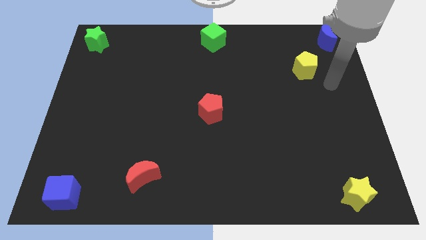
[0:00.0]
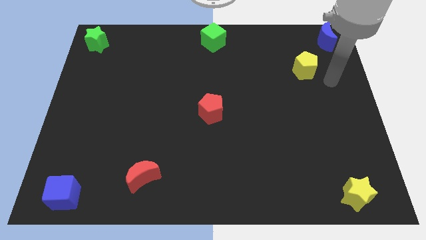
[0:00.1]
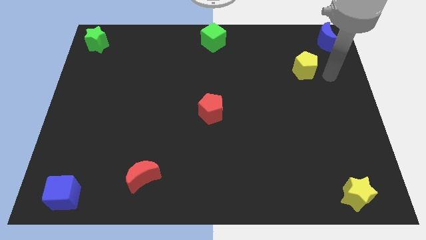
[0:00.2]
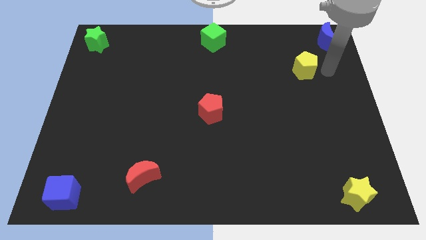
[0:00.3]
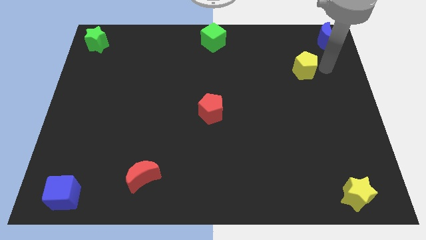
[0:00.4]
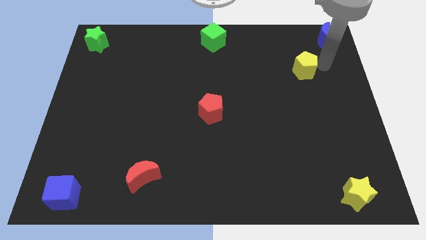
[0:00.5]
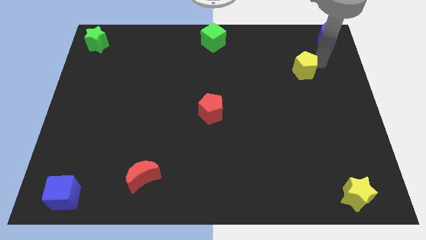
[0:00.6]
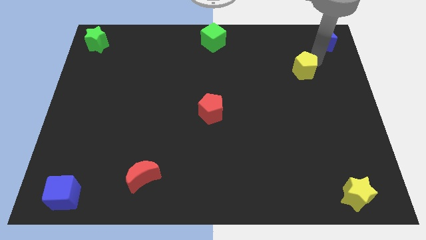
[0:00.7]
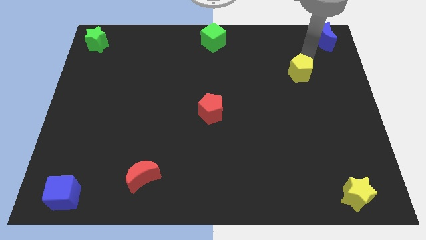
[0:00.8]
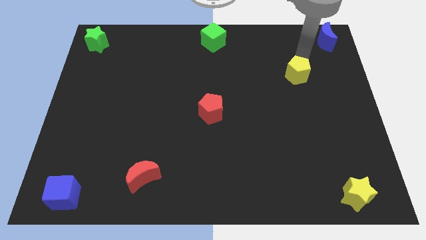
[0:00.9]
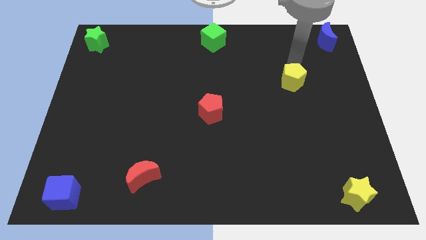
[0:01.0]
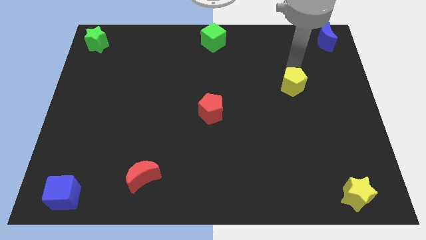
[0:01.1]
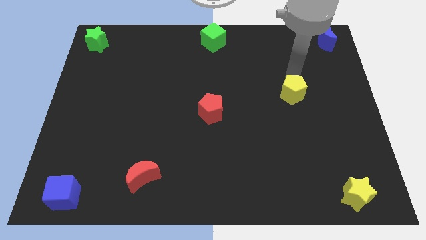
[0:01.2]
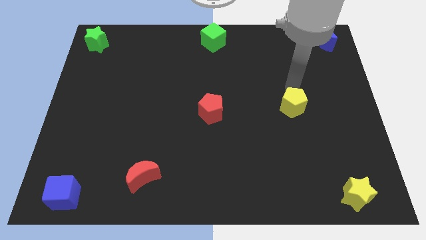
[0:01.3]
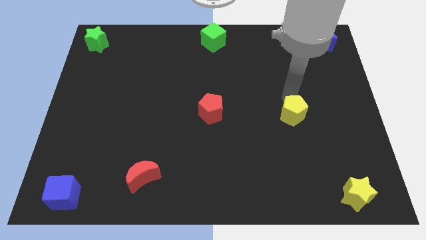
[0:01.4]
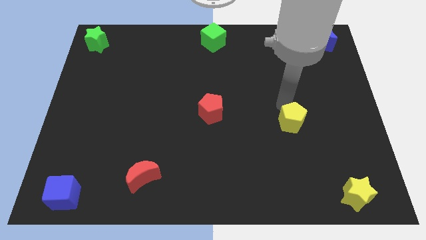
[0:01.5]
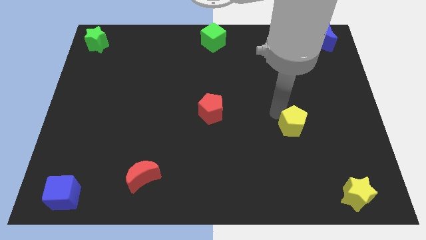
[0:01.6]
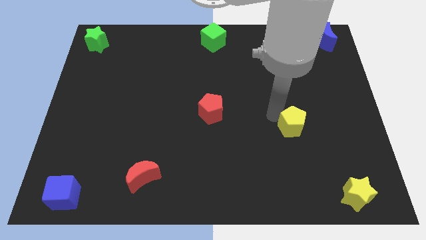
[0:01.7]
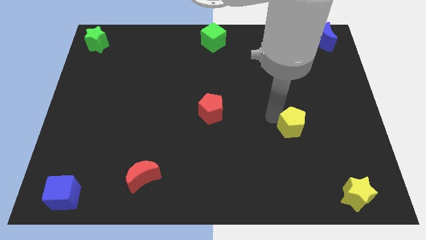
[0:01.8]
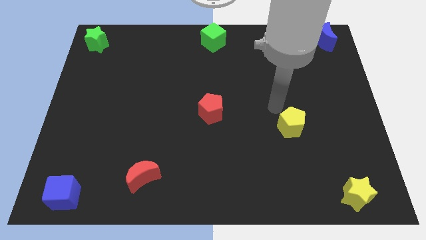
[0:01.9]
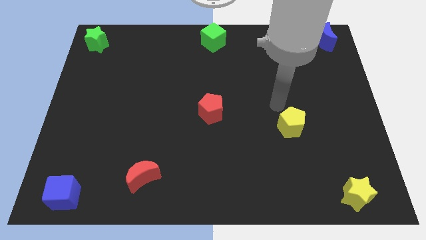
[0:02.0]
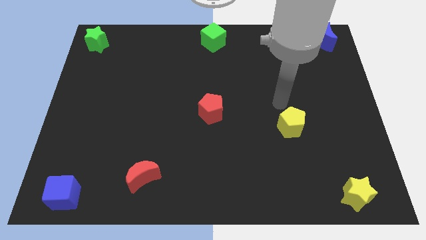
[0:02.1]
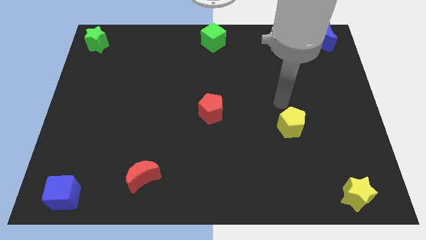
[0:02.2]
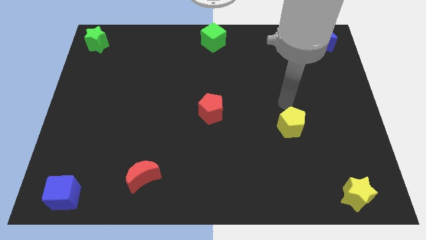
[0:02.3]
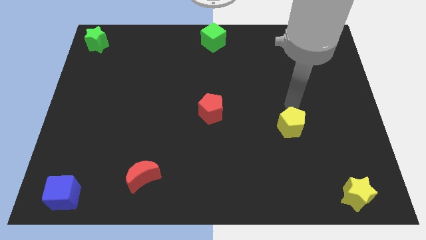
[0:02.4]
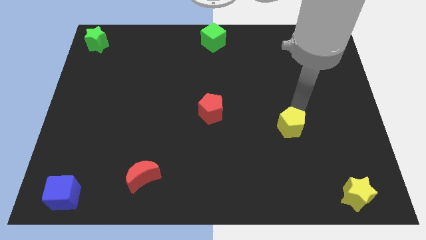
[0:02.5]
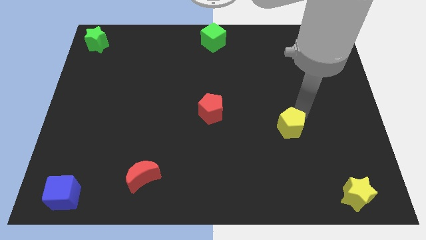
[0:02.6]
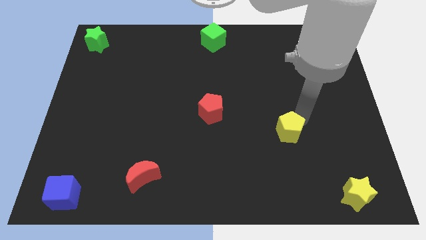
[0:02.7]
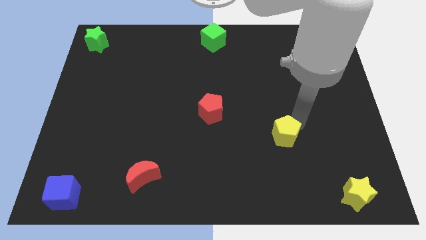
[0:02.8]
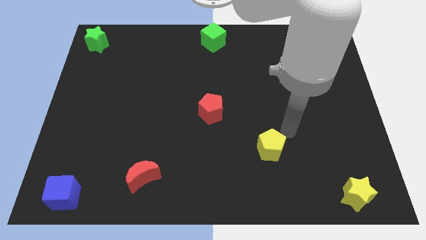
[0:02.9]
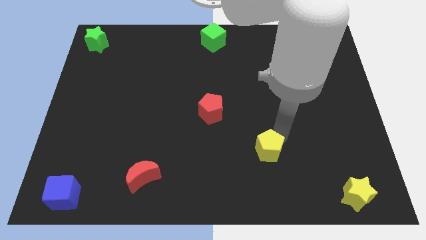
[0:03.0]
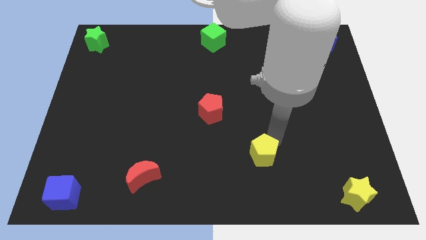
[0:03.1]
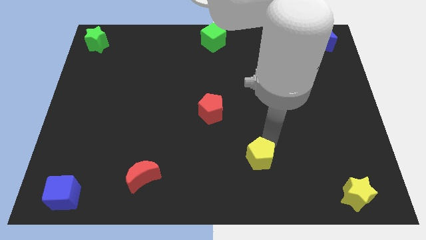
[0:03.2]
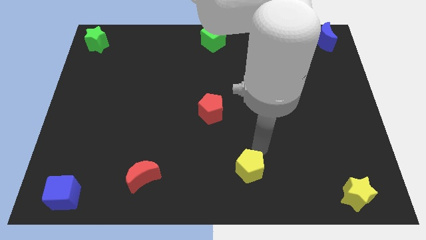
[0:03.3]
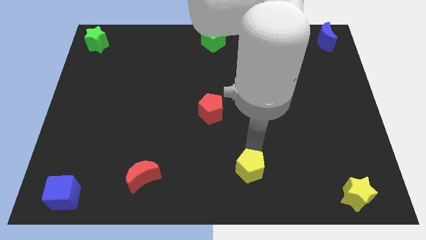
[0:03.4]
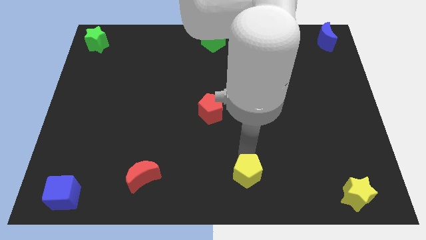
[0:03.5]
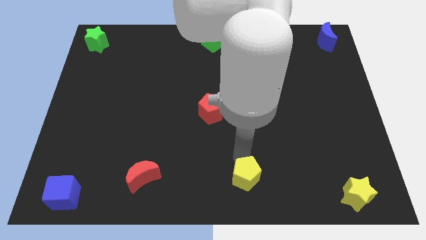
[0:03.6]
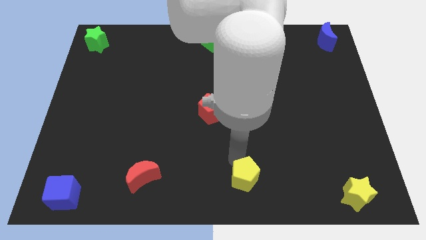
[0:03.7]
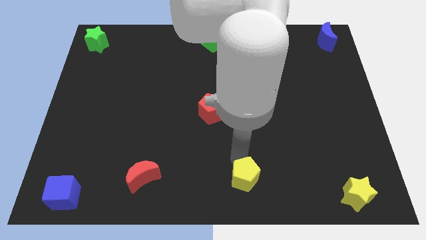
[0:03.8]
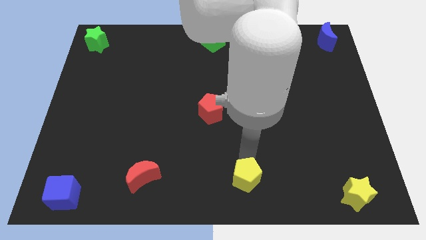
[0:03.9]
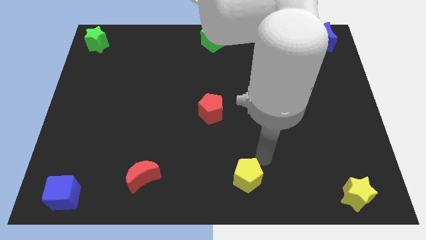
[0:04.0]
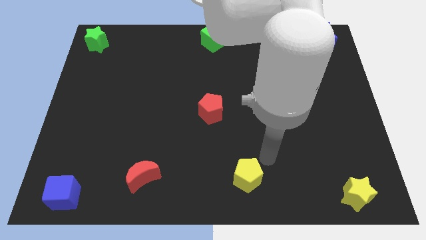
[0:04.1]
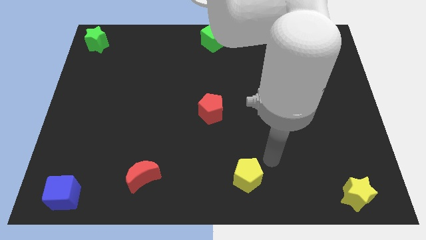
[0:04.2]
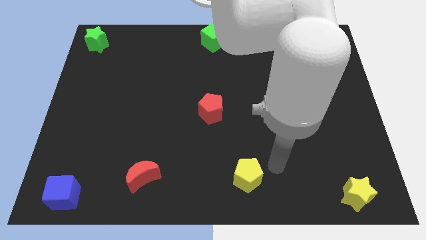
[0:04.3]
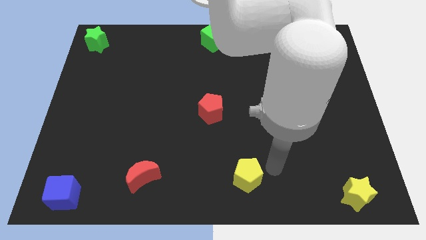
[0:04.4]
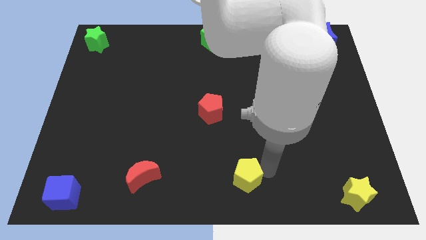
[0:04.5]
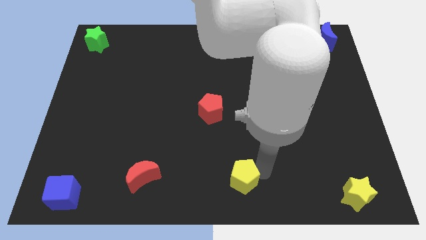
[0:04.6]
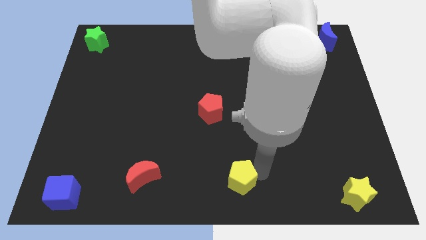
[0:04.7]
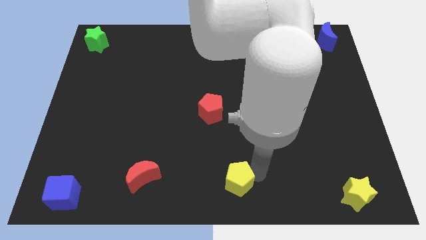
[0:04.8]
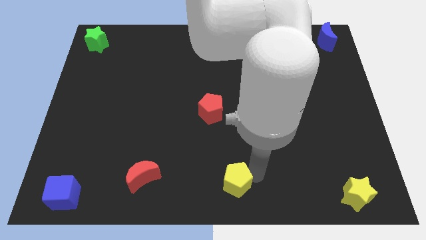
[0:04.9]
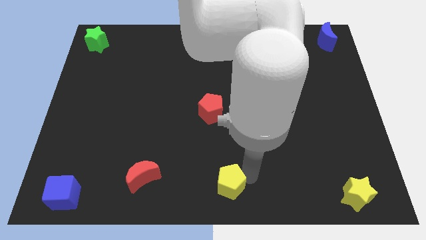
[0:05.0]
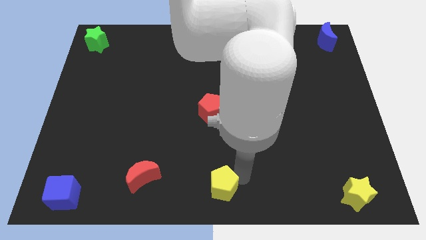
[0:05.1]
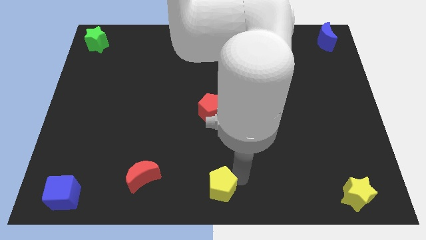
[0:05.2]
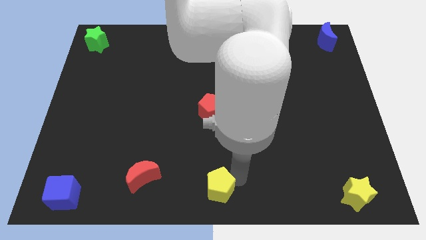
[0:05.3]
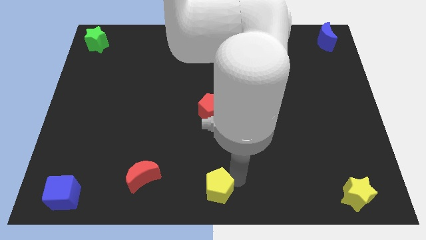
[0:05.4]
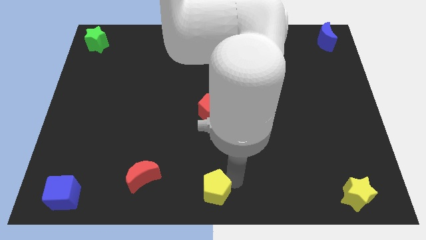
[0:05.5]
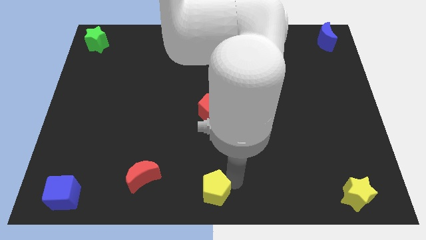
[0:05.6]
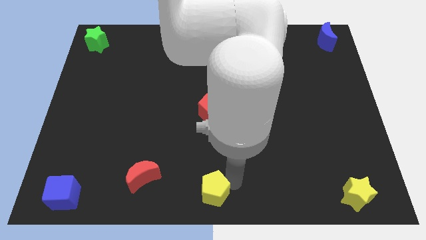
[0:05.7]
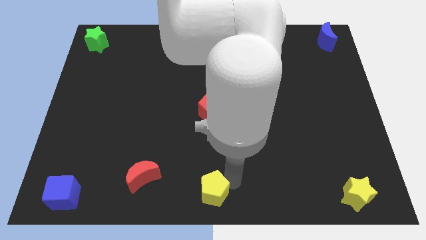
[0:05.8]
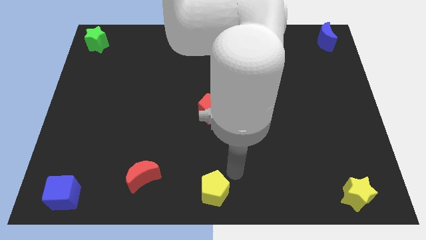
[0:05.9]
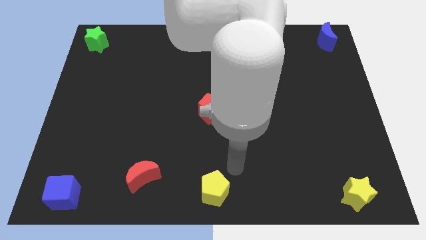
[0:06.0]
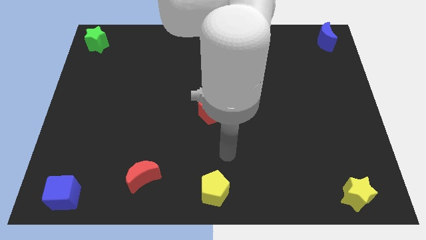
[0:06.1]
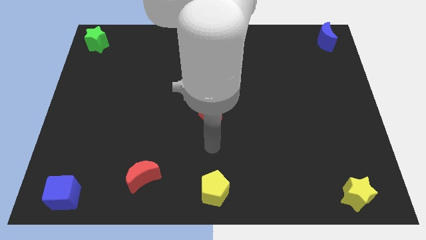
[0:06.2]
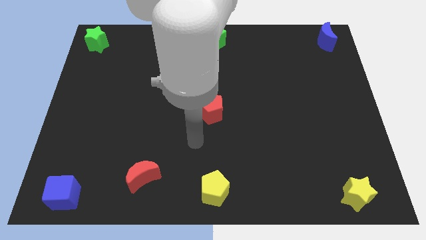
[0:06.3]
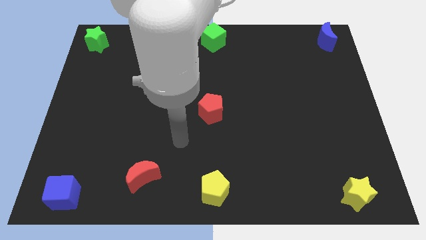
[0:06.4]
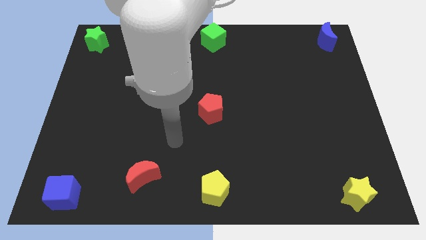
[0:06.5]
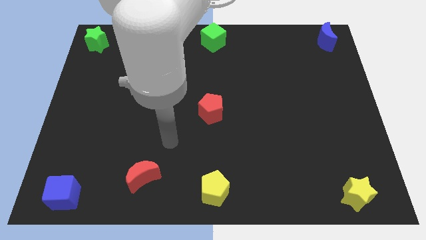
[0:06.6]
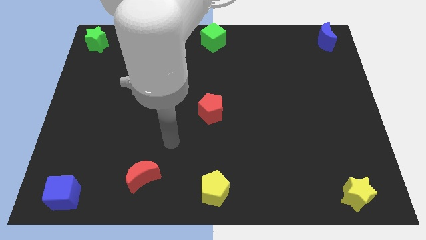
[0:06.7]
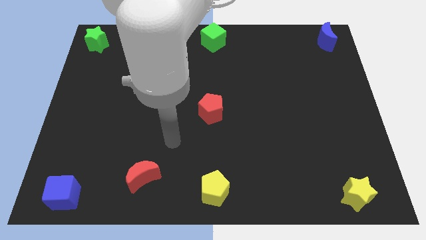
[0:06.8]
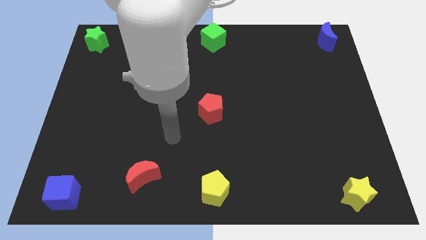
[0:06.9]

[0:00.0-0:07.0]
place the yellow pentagon vertically below the red pentagon

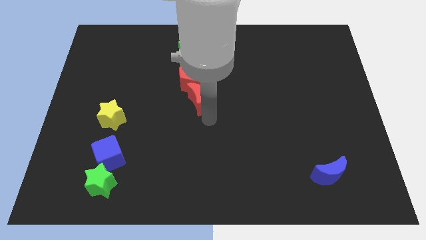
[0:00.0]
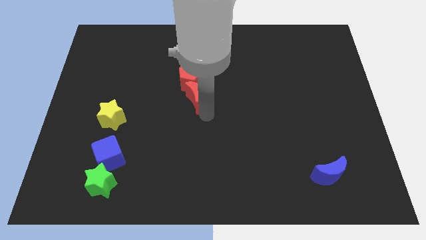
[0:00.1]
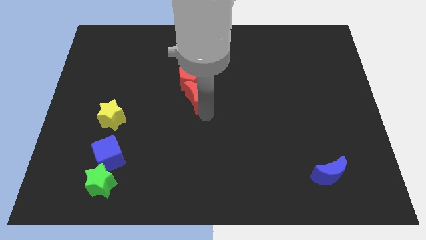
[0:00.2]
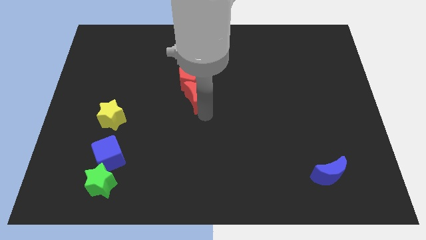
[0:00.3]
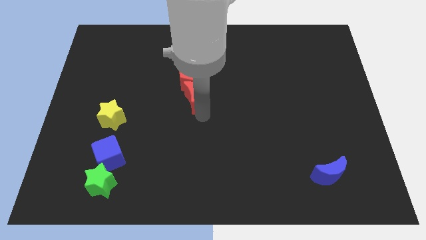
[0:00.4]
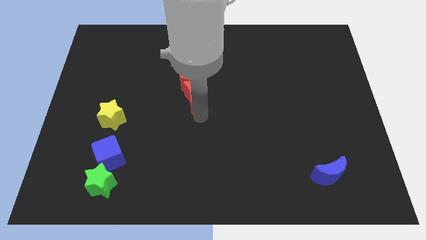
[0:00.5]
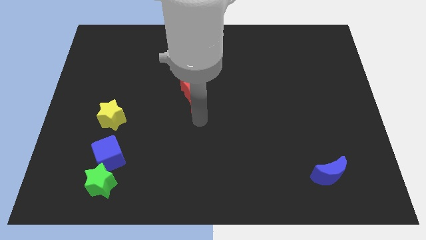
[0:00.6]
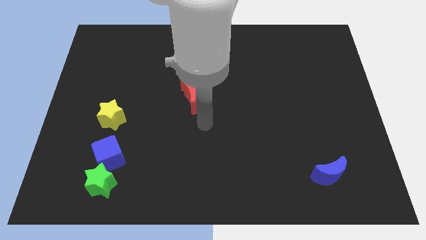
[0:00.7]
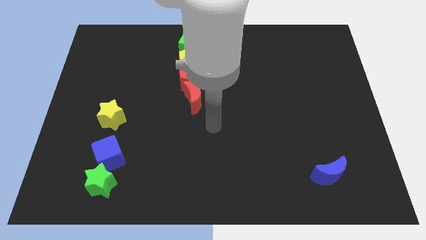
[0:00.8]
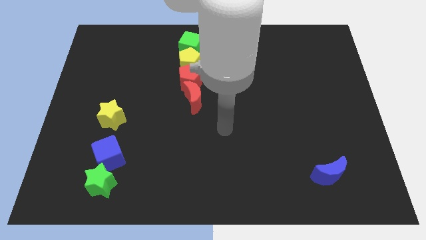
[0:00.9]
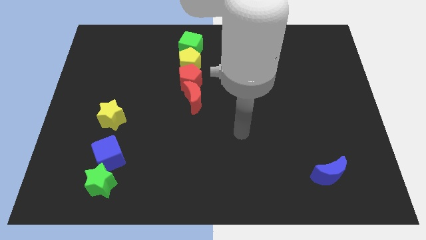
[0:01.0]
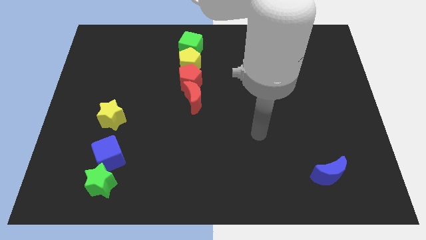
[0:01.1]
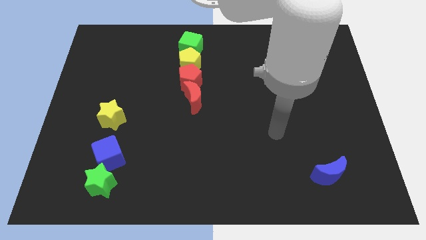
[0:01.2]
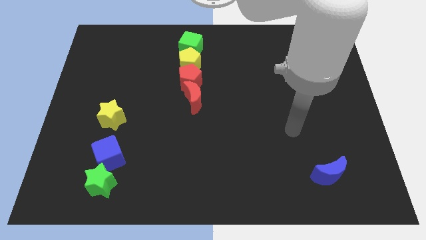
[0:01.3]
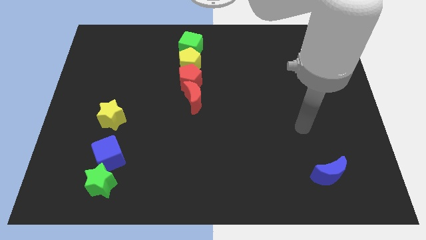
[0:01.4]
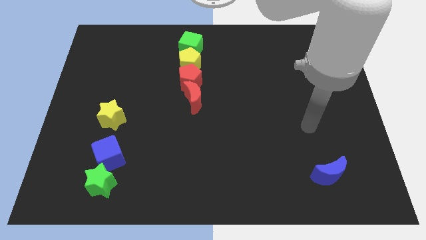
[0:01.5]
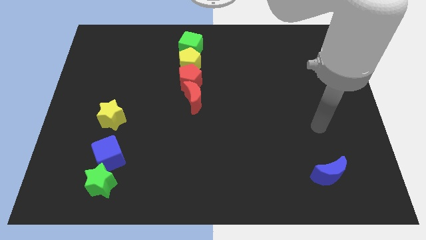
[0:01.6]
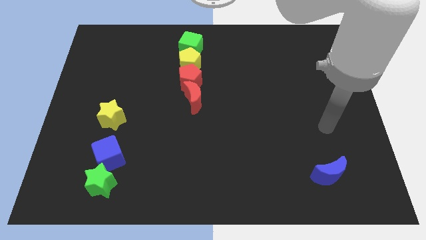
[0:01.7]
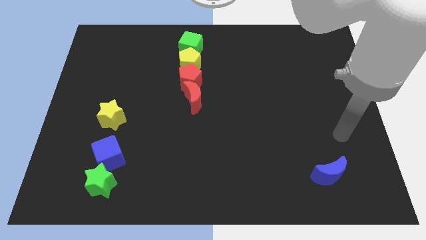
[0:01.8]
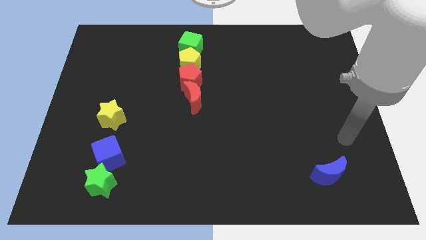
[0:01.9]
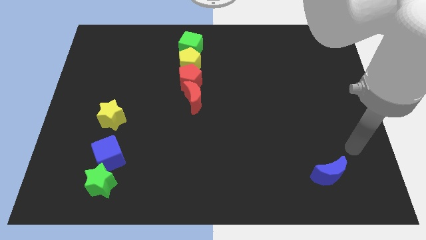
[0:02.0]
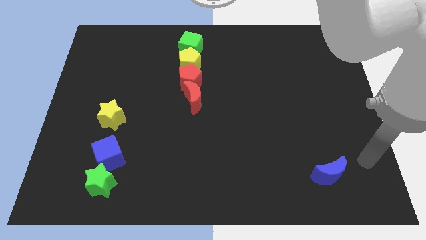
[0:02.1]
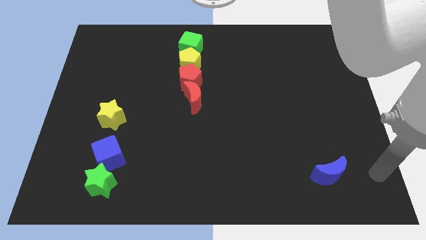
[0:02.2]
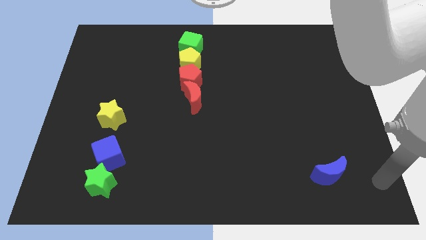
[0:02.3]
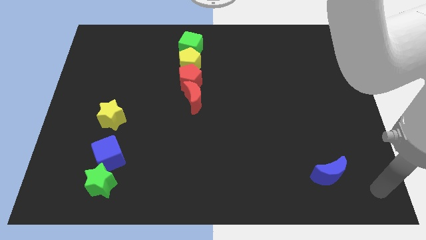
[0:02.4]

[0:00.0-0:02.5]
move the arm away from the red moon
